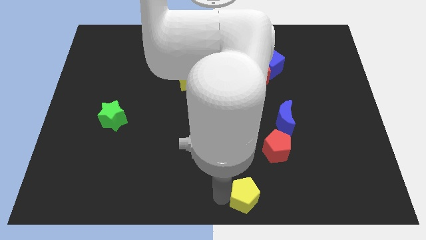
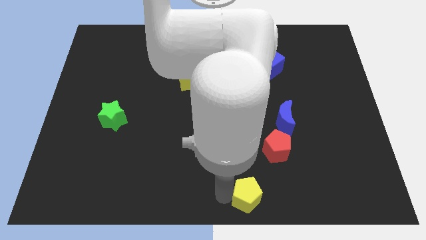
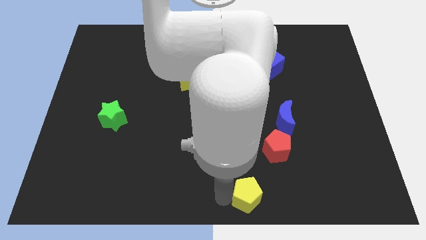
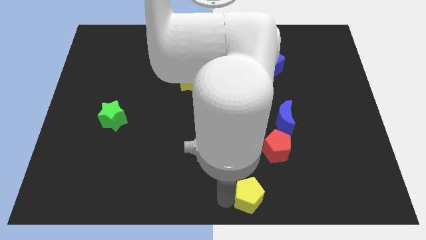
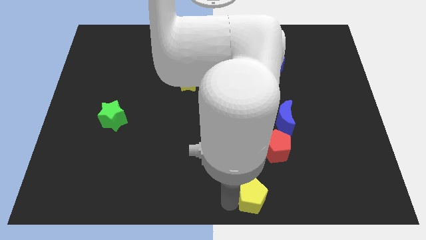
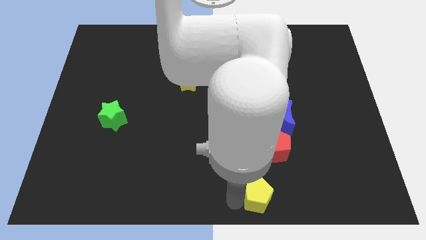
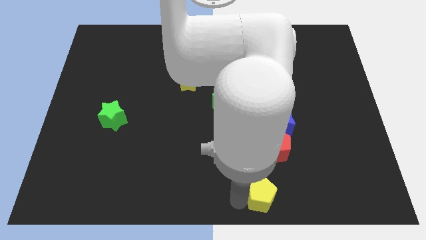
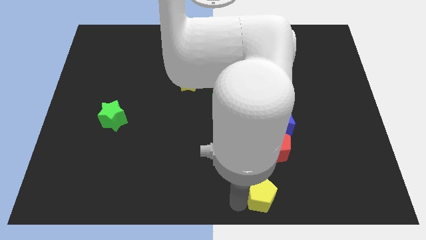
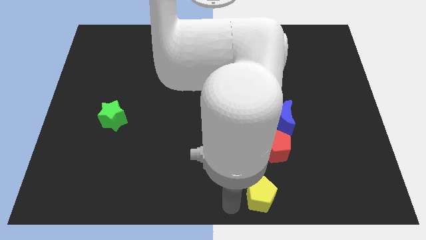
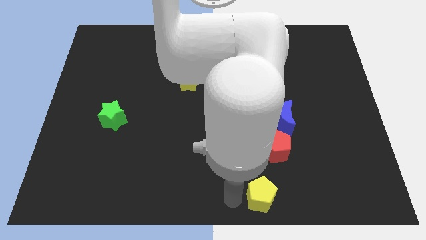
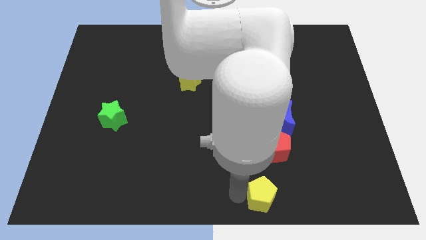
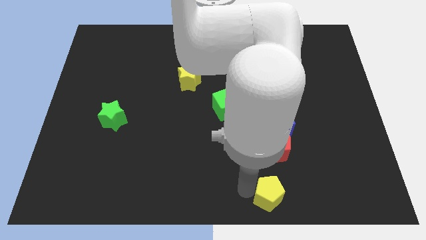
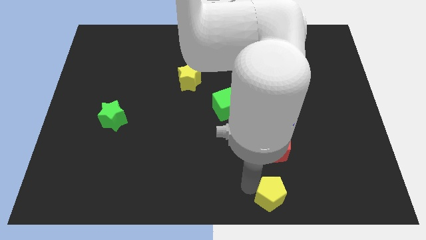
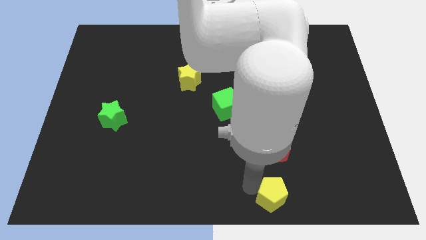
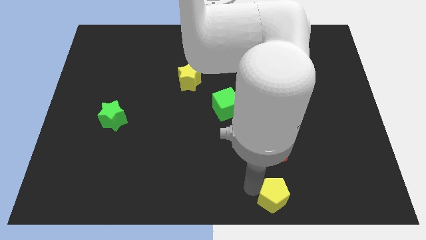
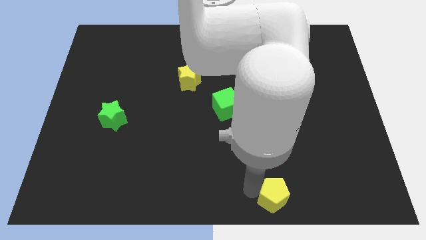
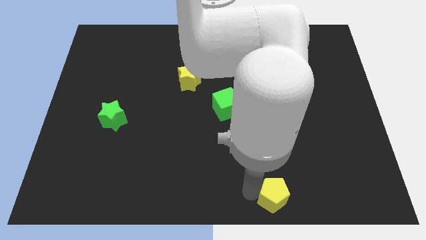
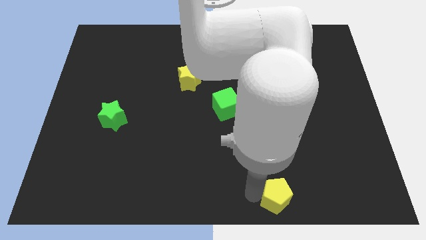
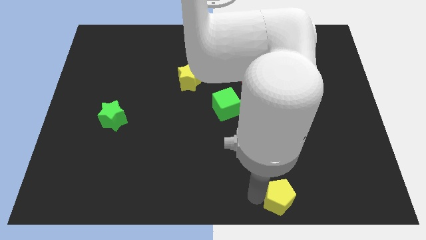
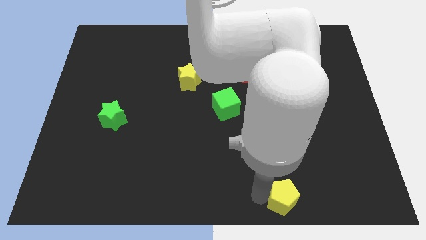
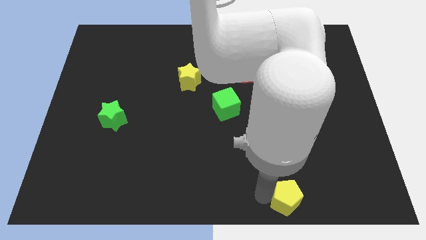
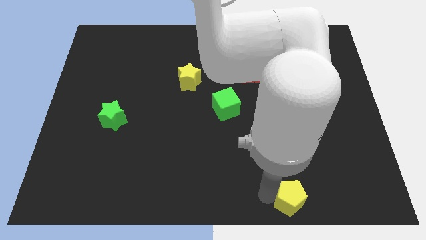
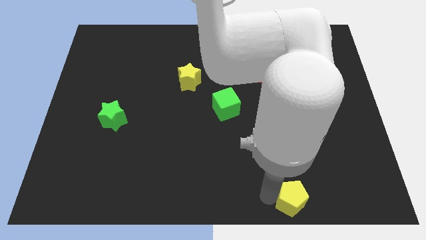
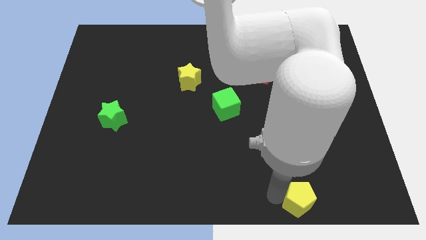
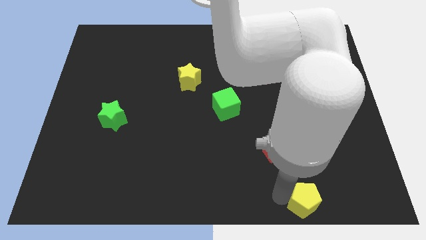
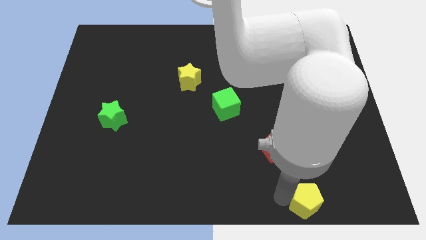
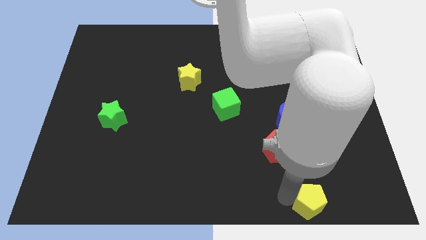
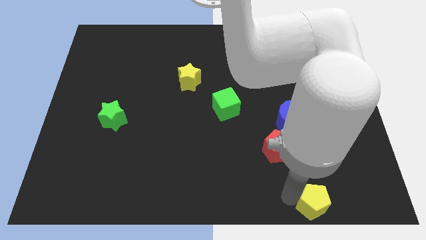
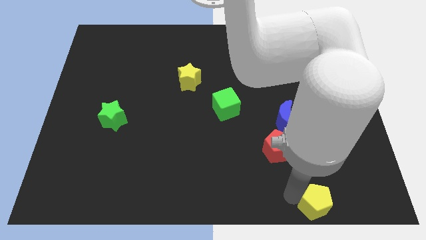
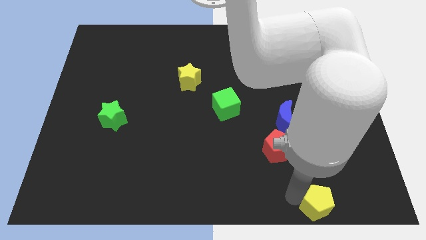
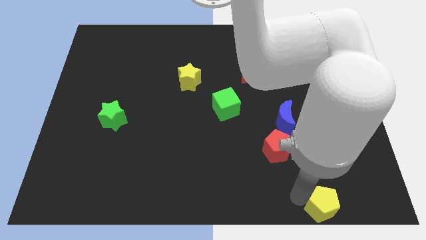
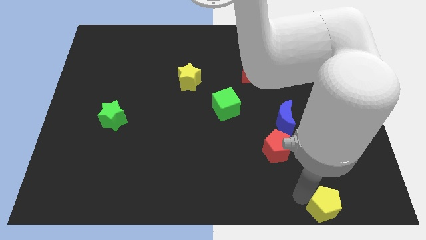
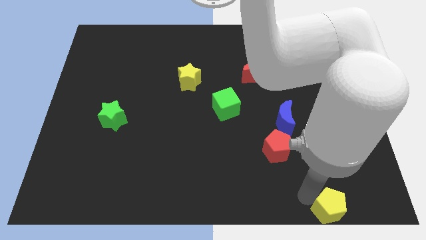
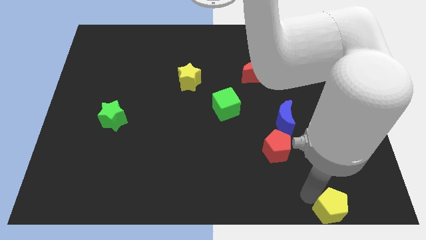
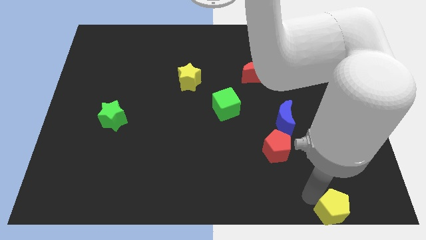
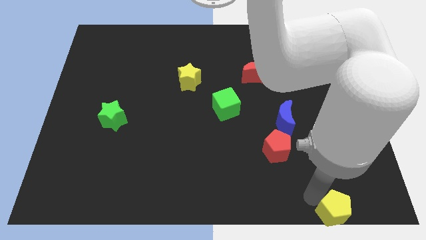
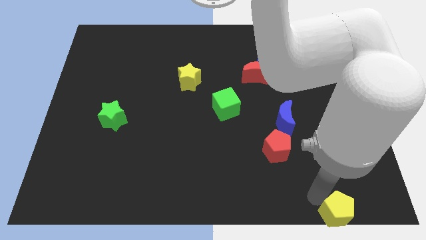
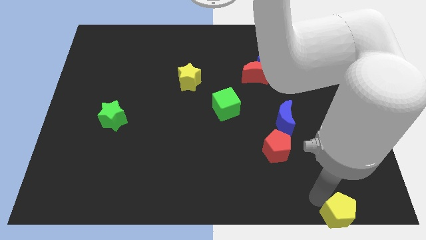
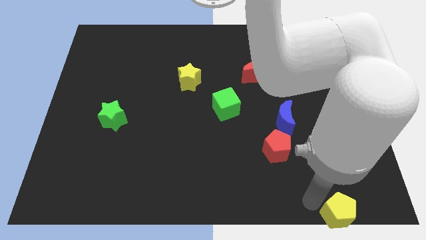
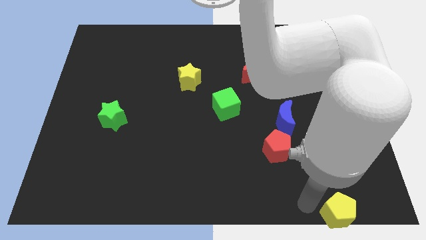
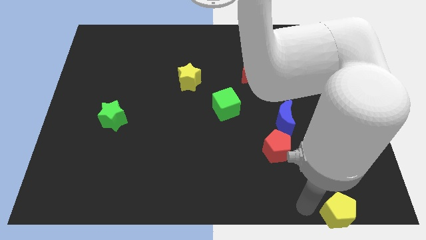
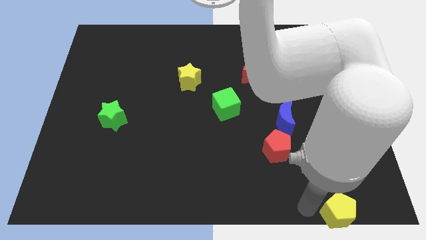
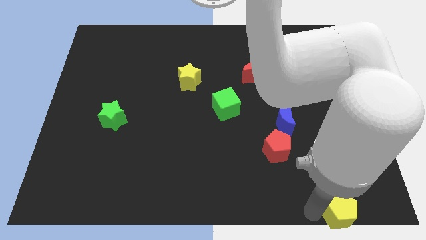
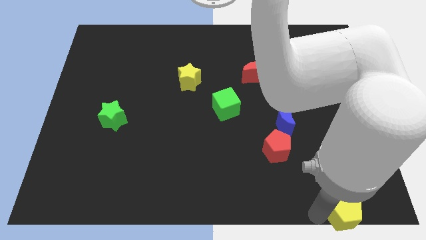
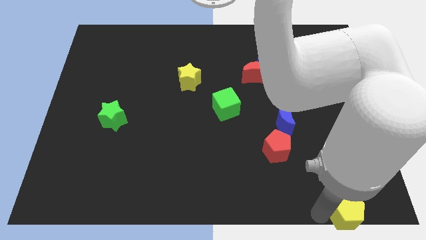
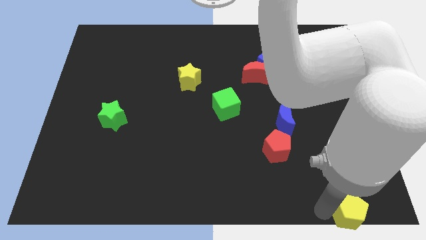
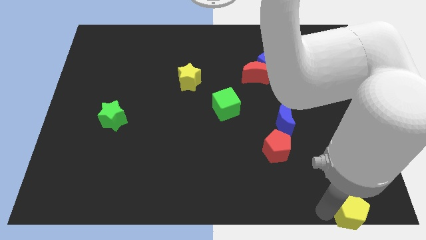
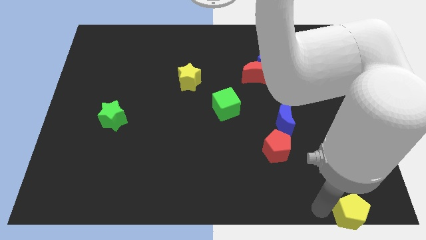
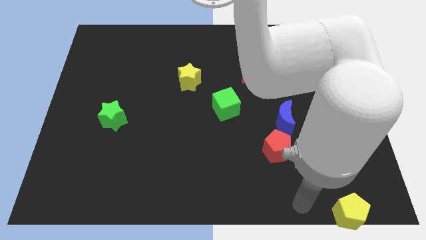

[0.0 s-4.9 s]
move the yellow pentagon to bottom right of the red pentagon

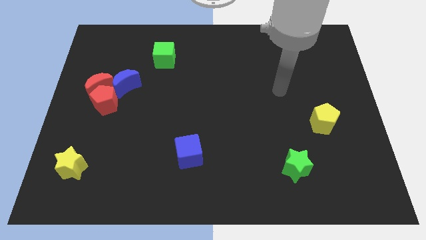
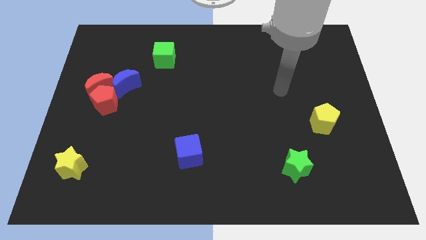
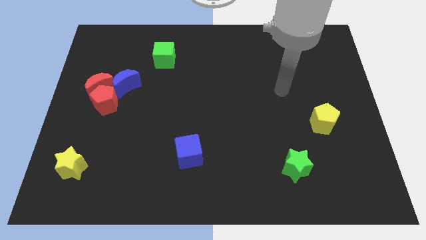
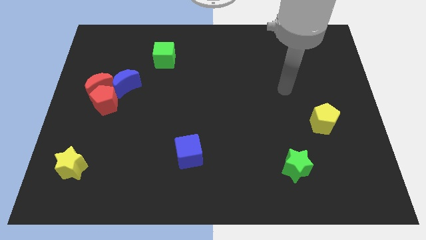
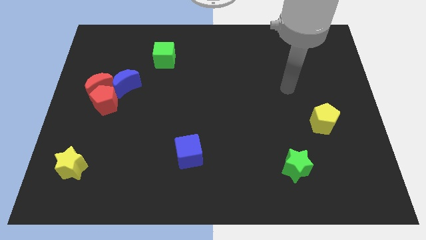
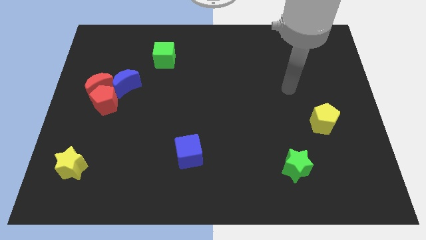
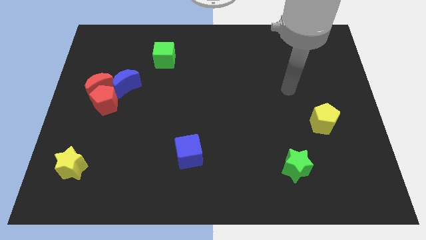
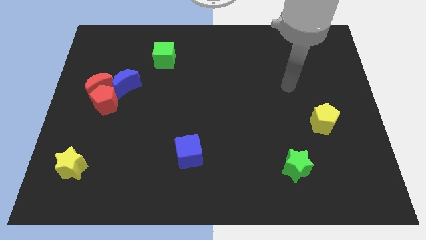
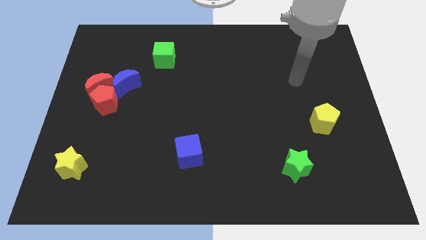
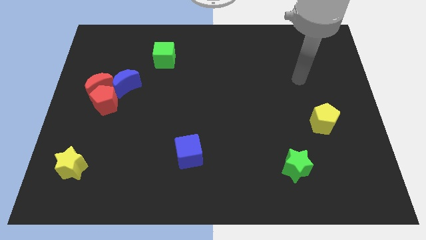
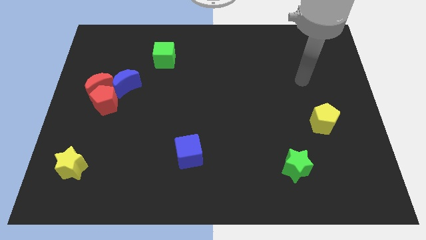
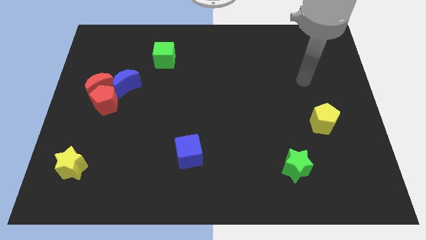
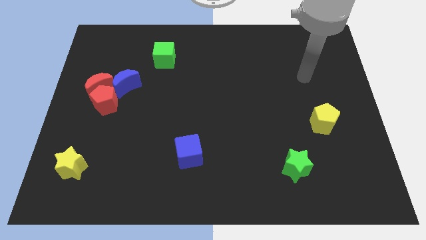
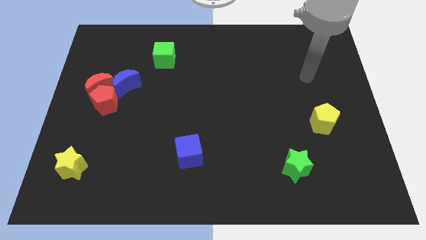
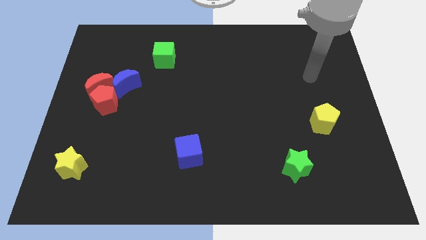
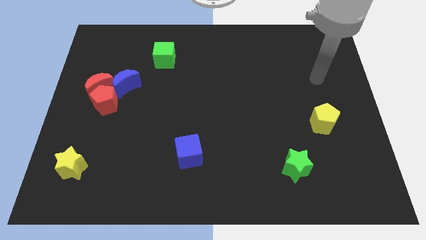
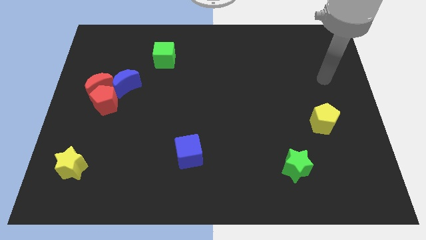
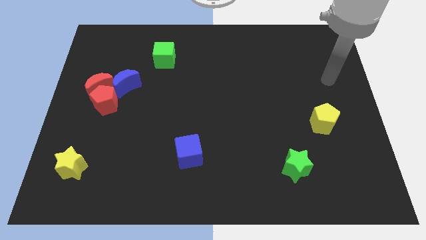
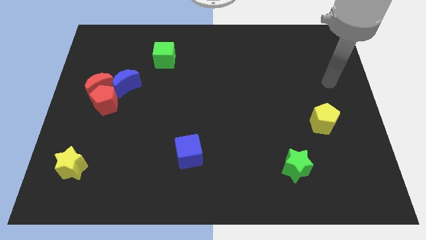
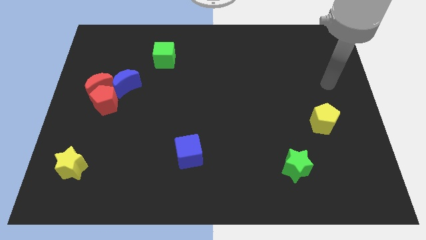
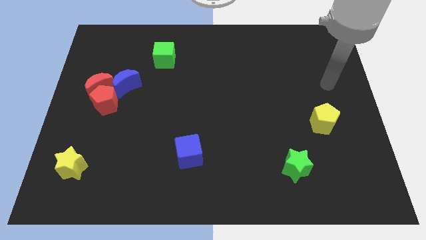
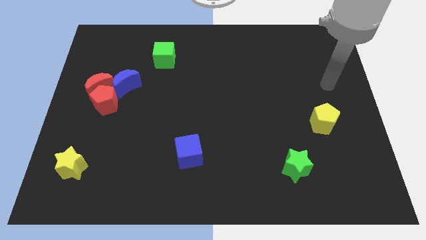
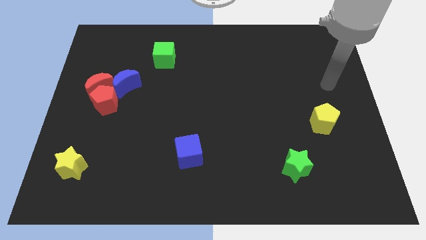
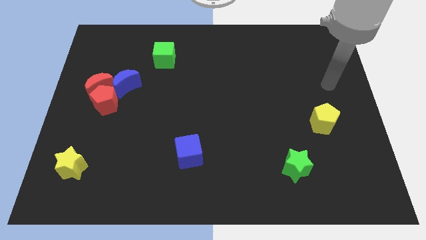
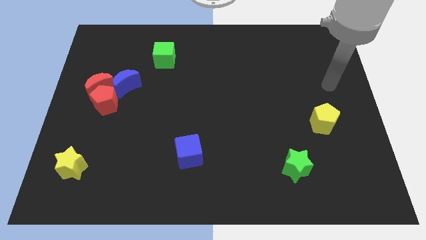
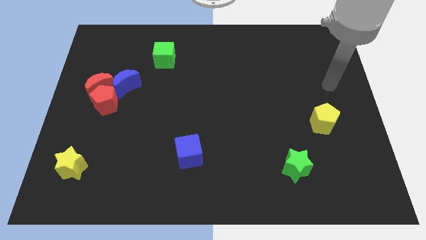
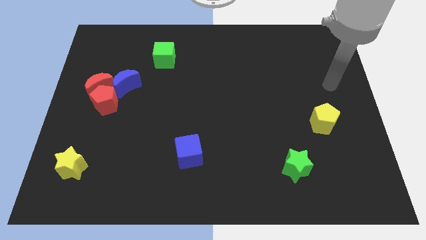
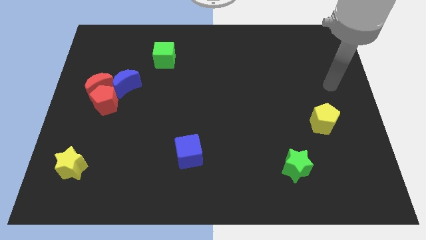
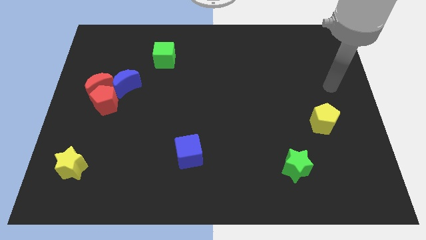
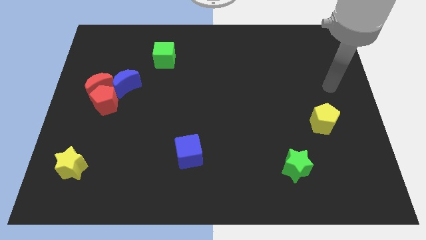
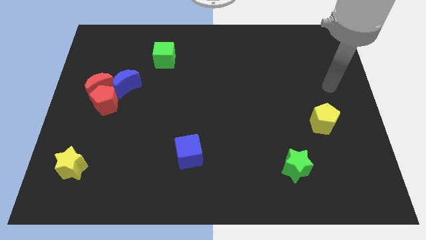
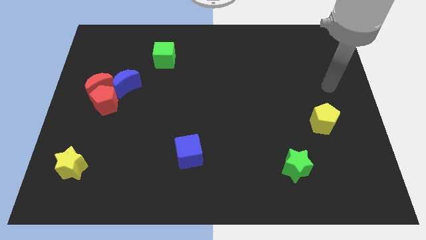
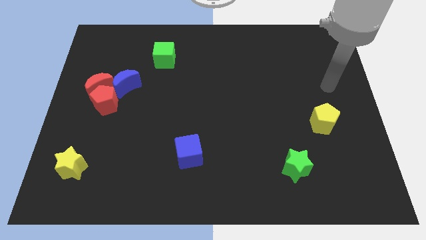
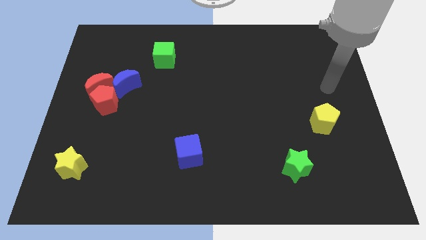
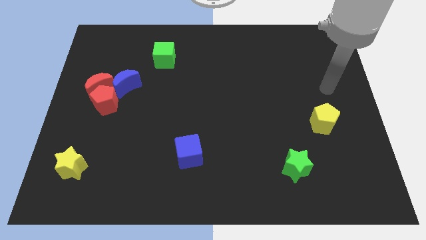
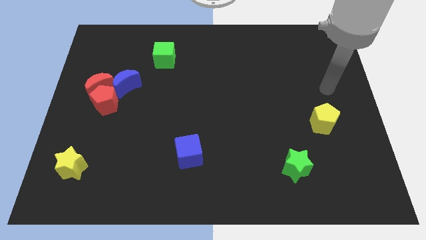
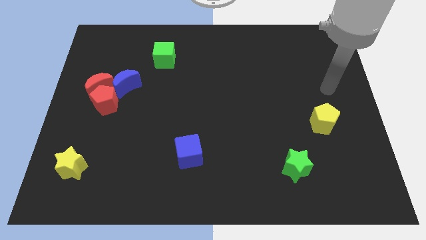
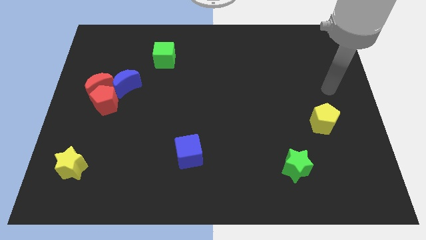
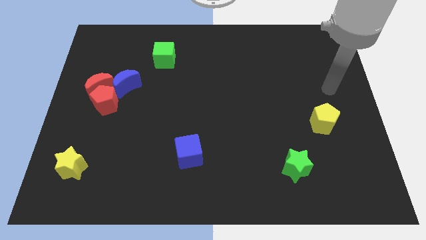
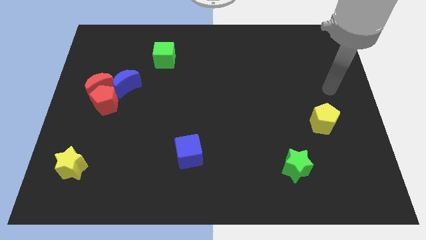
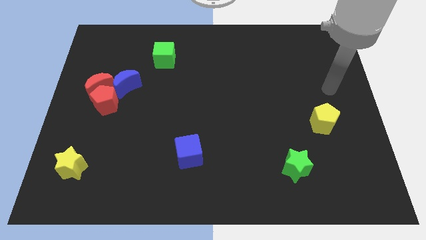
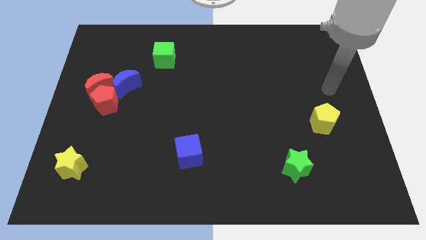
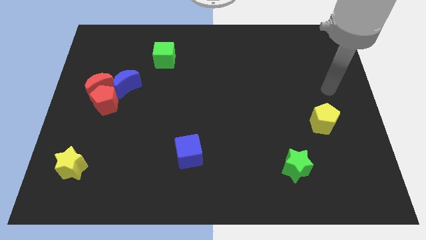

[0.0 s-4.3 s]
move the arm towards the yellow pentagon
